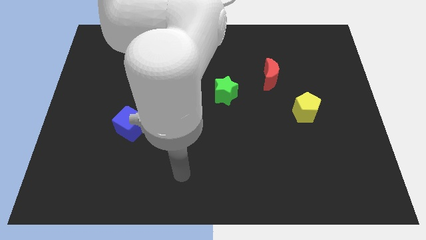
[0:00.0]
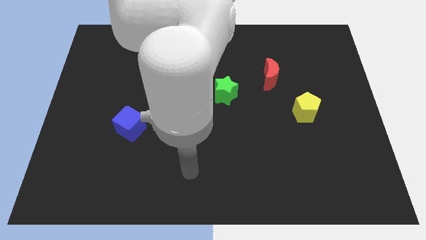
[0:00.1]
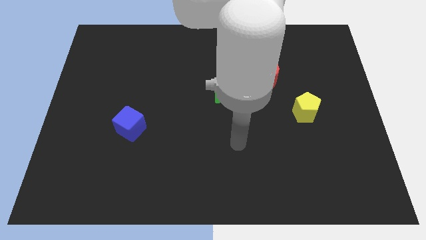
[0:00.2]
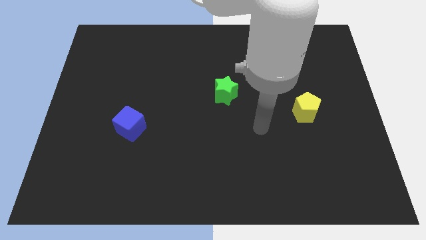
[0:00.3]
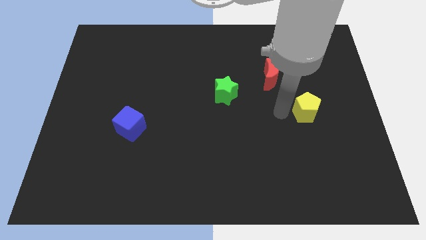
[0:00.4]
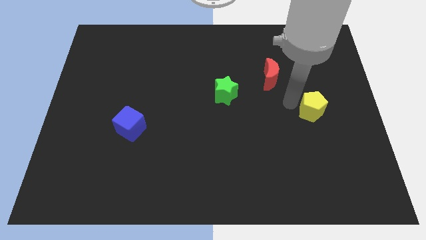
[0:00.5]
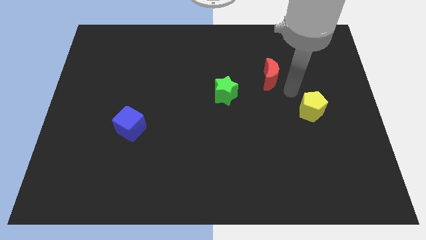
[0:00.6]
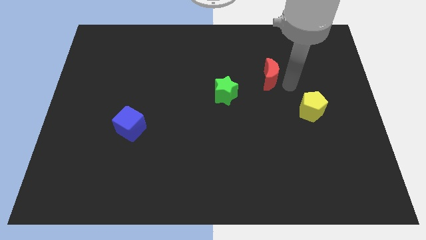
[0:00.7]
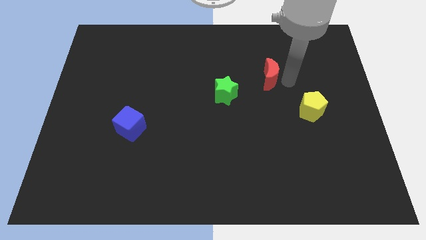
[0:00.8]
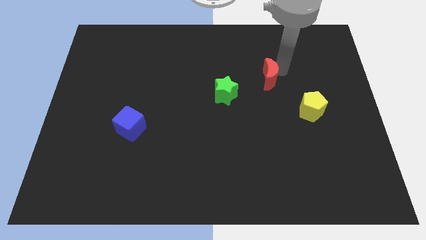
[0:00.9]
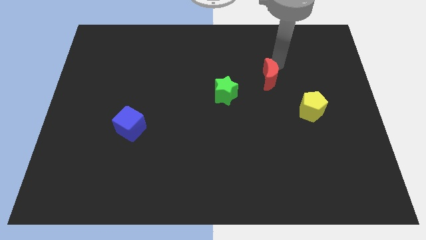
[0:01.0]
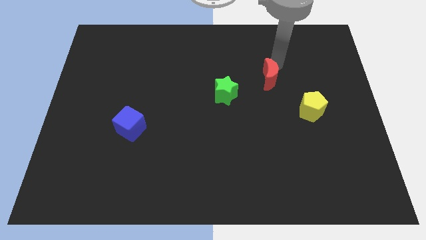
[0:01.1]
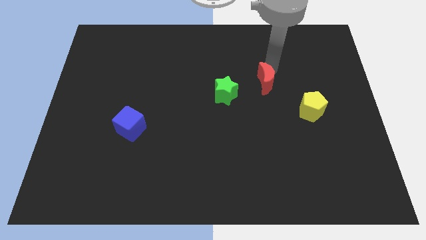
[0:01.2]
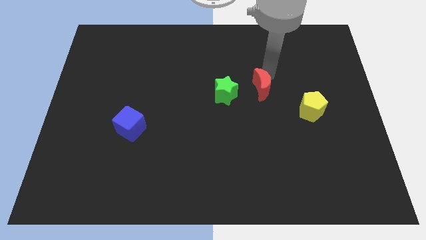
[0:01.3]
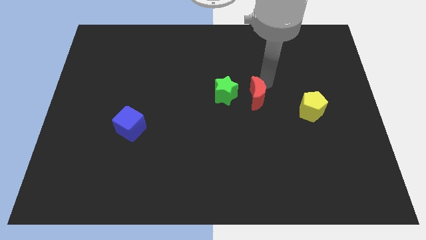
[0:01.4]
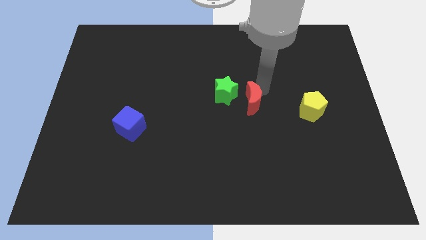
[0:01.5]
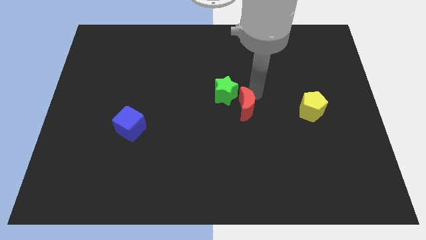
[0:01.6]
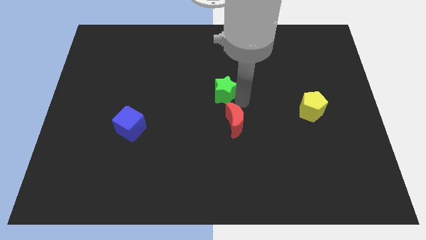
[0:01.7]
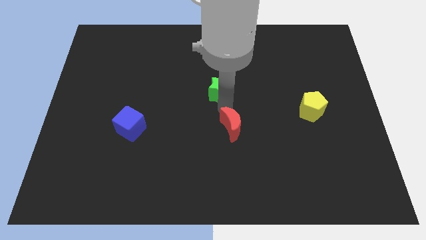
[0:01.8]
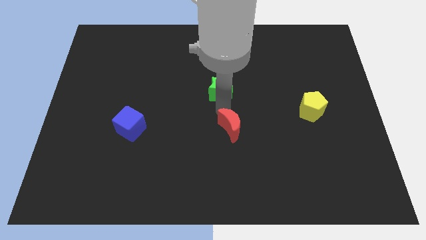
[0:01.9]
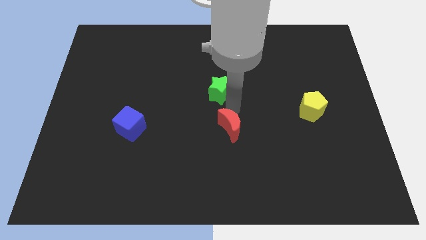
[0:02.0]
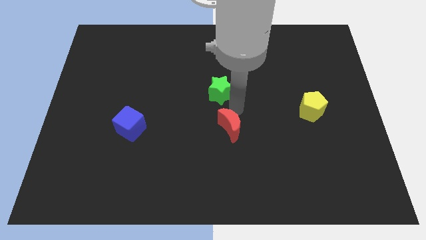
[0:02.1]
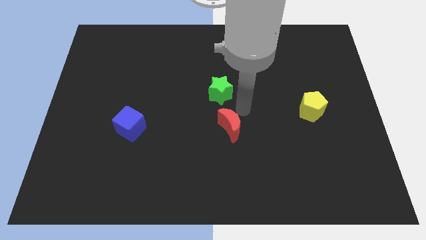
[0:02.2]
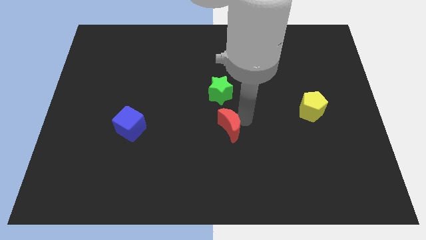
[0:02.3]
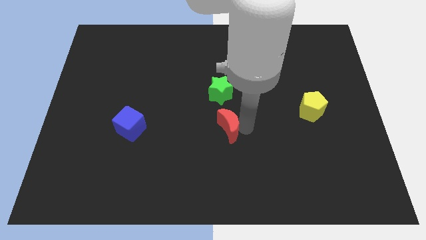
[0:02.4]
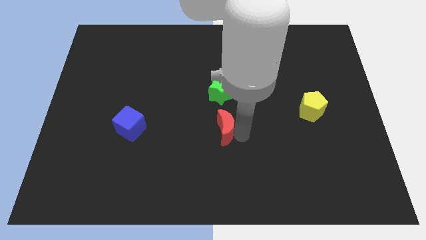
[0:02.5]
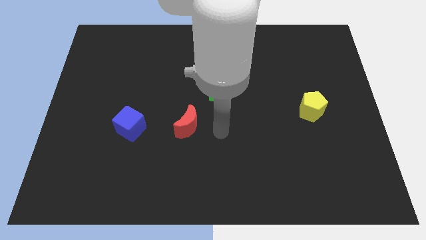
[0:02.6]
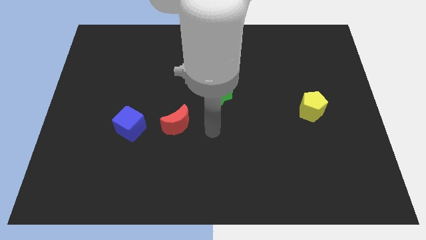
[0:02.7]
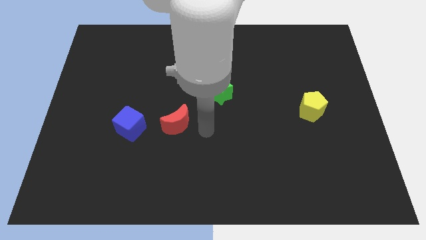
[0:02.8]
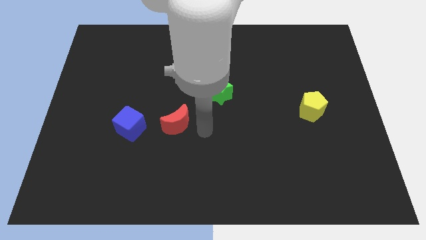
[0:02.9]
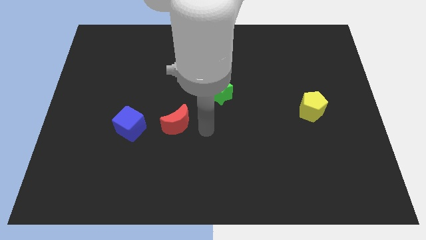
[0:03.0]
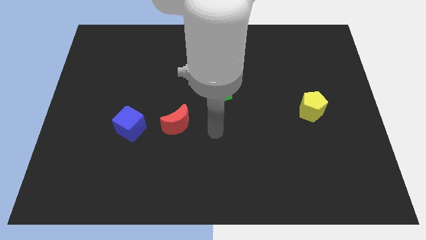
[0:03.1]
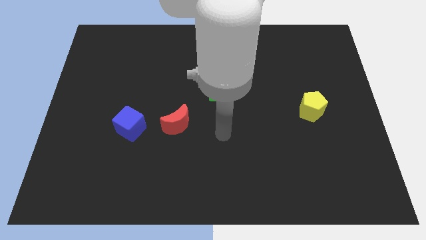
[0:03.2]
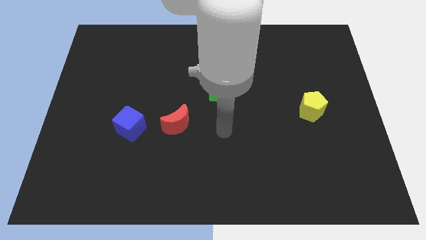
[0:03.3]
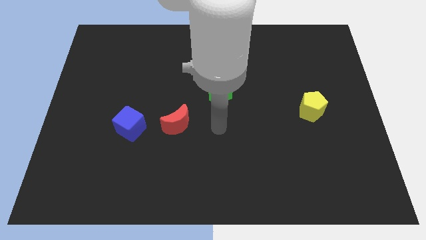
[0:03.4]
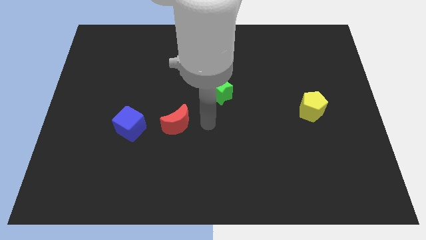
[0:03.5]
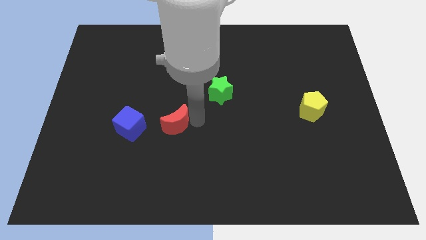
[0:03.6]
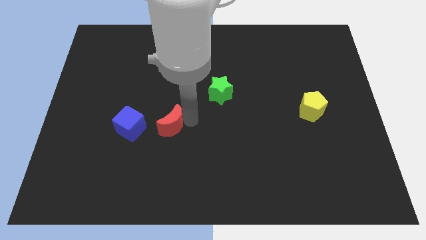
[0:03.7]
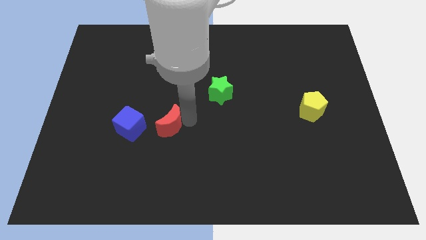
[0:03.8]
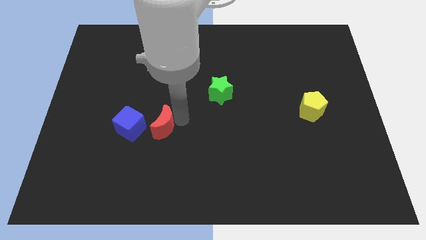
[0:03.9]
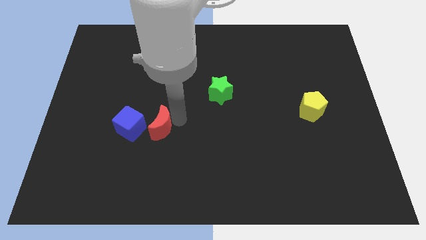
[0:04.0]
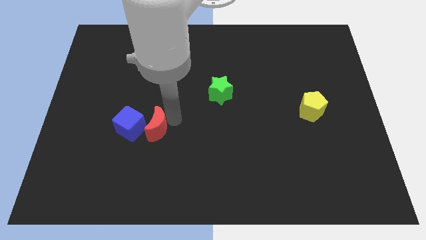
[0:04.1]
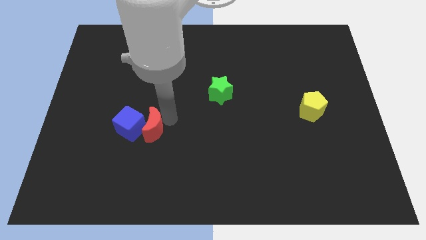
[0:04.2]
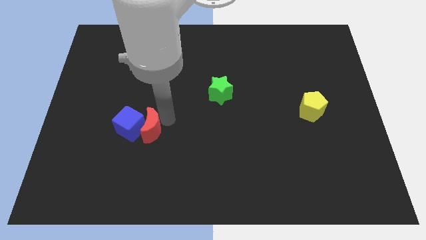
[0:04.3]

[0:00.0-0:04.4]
slide the red moon towards the cube

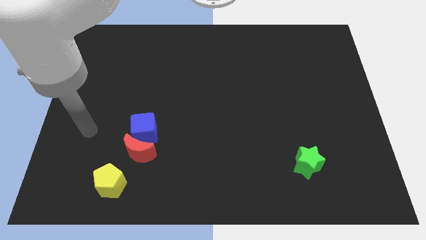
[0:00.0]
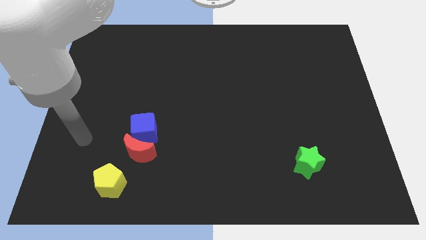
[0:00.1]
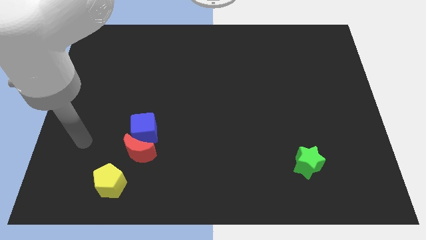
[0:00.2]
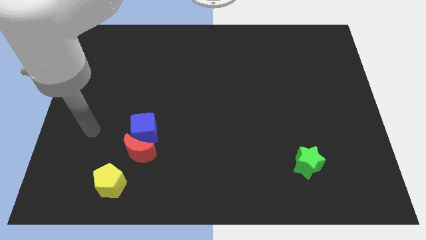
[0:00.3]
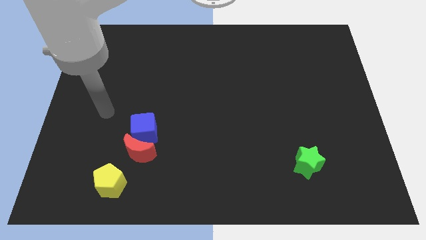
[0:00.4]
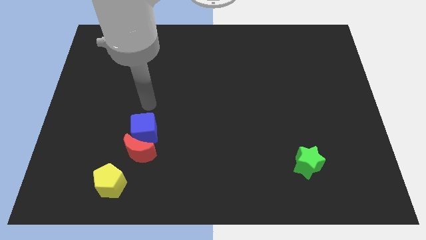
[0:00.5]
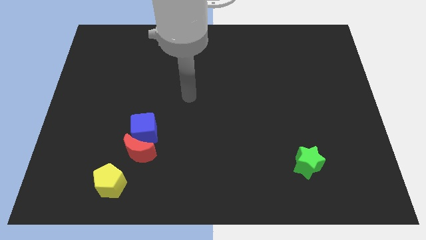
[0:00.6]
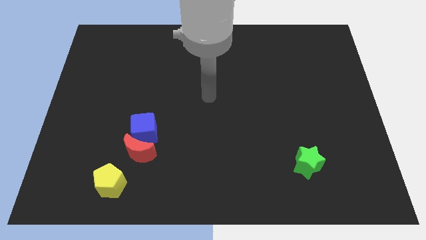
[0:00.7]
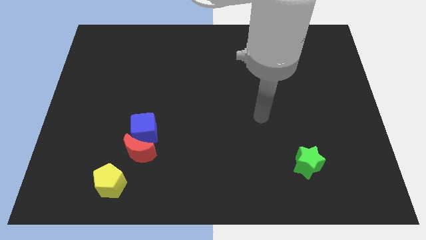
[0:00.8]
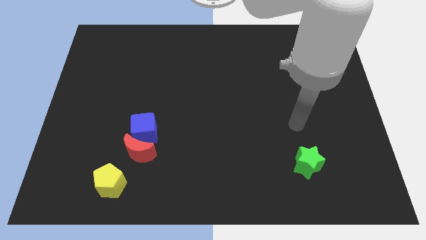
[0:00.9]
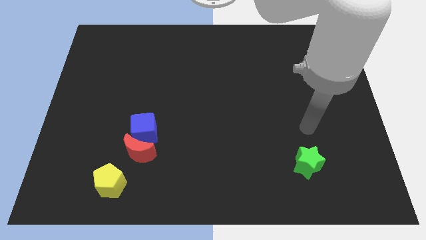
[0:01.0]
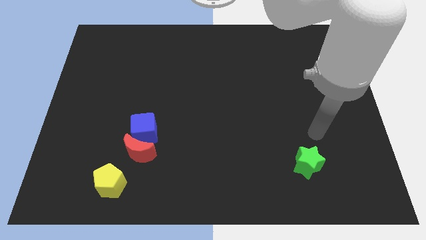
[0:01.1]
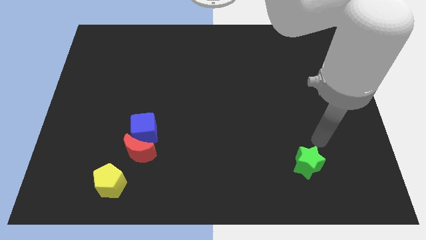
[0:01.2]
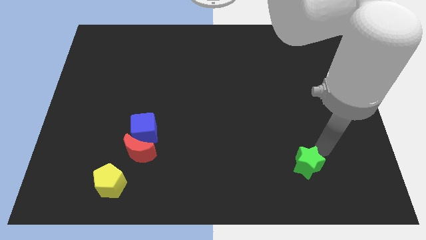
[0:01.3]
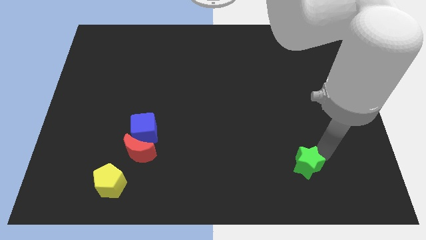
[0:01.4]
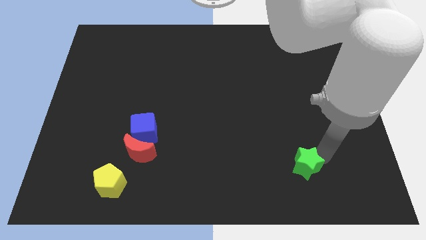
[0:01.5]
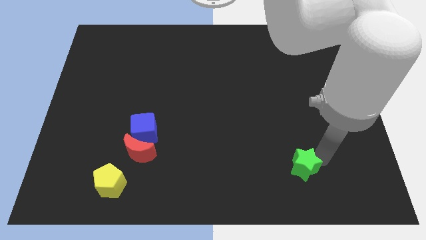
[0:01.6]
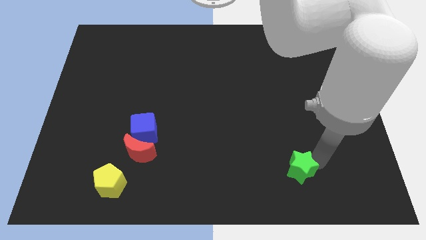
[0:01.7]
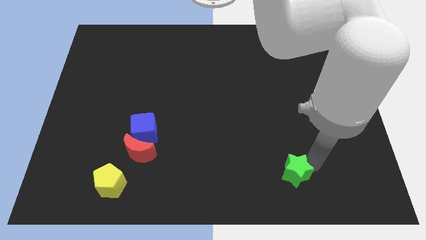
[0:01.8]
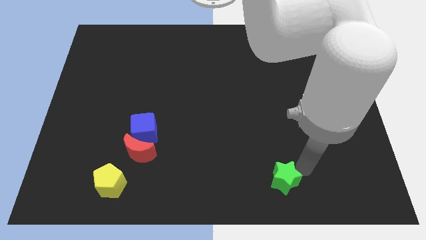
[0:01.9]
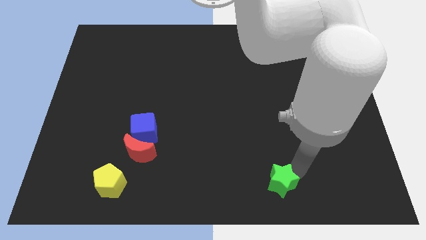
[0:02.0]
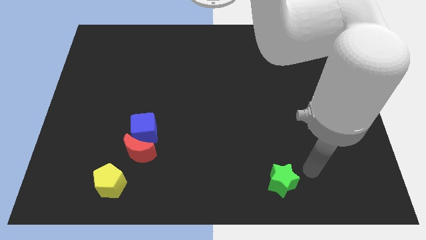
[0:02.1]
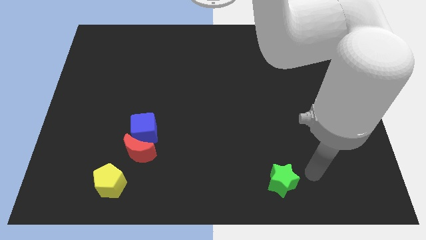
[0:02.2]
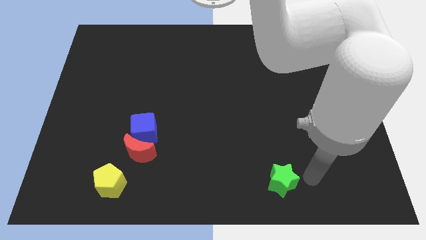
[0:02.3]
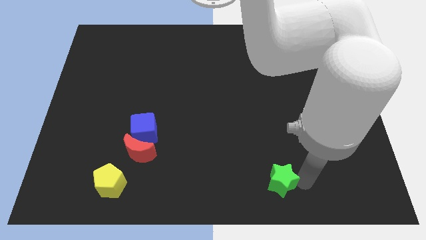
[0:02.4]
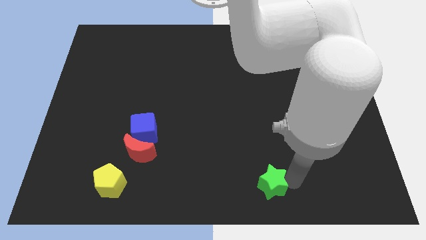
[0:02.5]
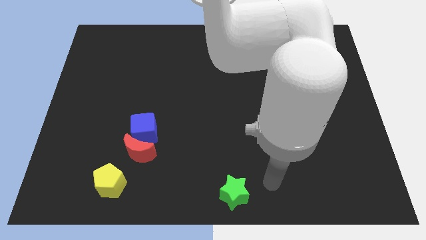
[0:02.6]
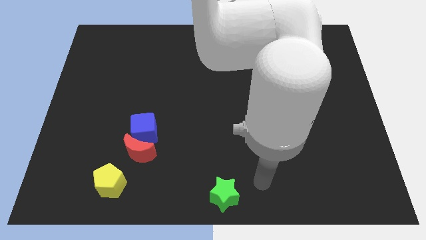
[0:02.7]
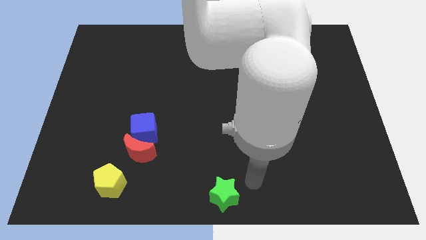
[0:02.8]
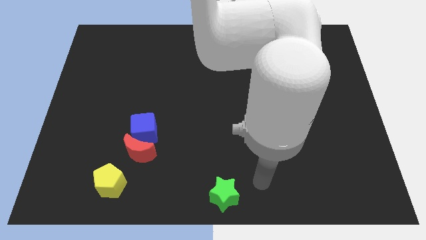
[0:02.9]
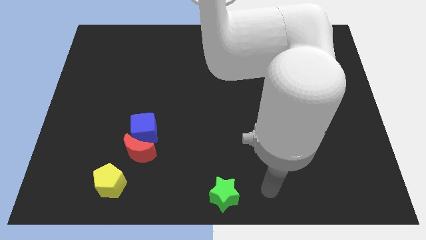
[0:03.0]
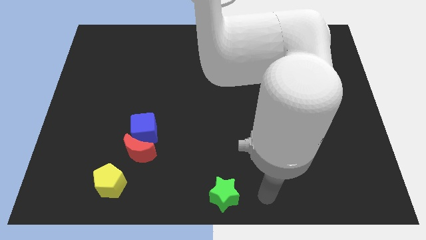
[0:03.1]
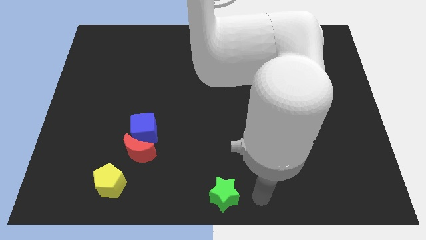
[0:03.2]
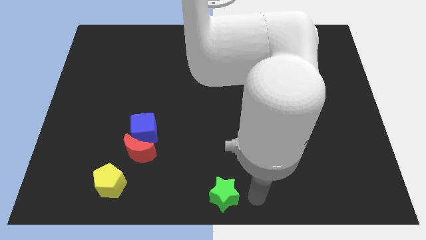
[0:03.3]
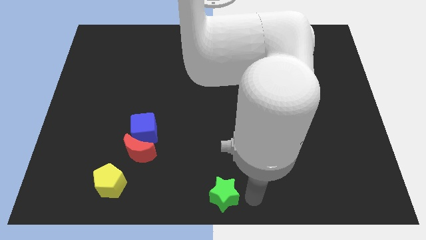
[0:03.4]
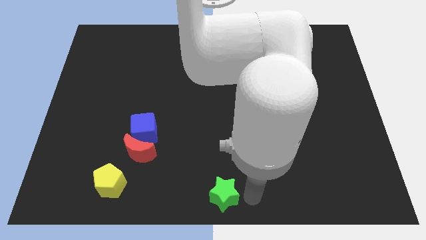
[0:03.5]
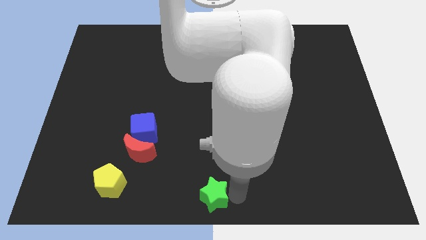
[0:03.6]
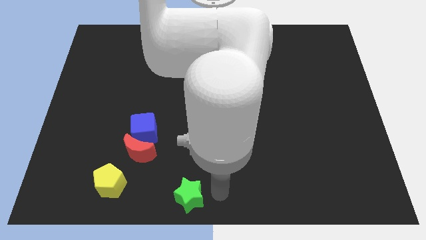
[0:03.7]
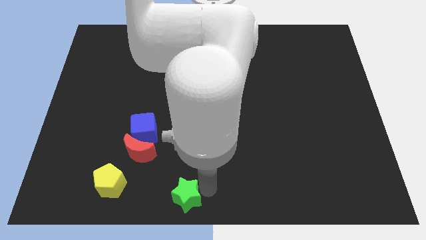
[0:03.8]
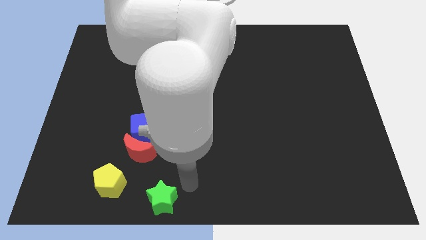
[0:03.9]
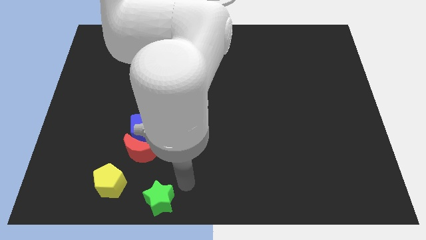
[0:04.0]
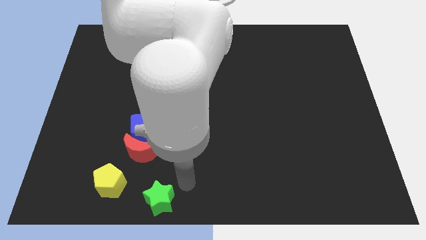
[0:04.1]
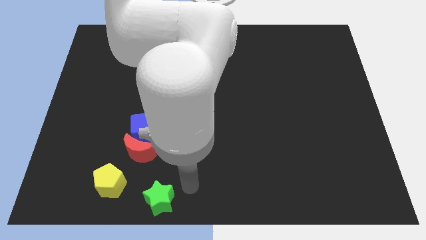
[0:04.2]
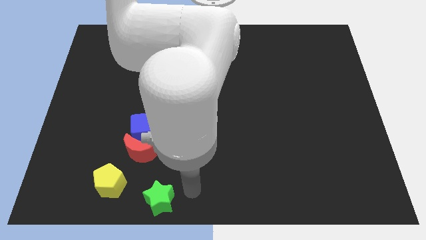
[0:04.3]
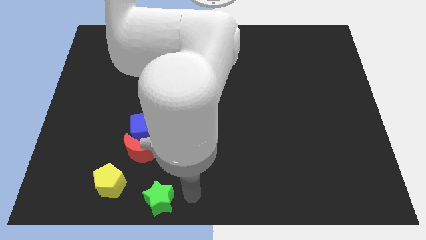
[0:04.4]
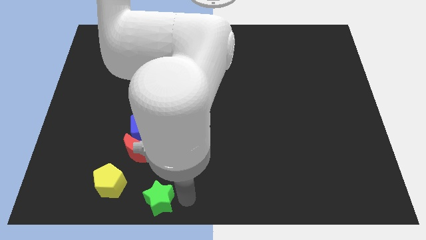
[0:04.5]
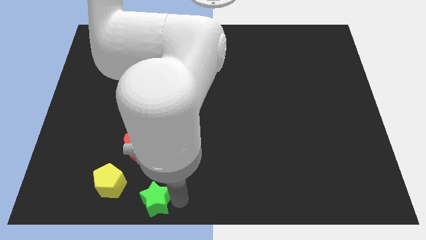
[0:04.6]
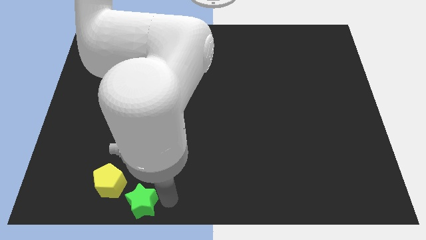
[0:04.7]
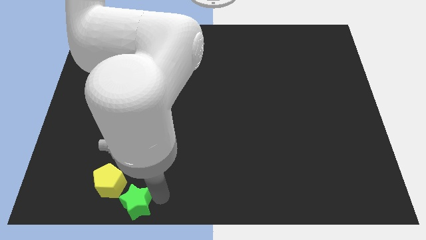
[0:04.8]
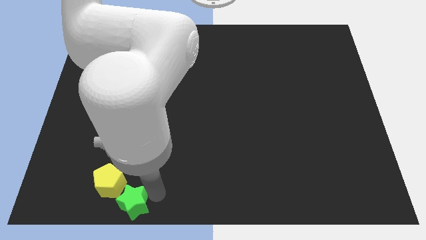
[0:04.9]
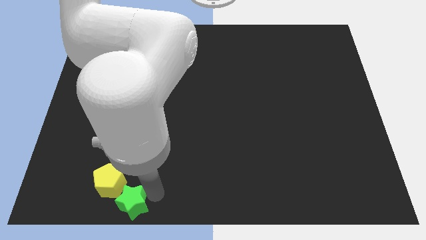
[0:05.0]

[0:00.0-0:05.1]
slide the star close to the yellow block
